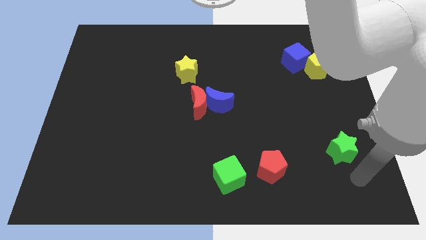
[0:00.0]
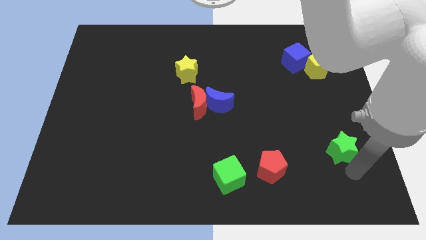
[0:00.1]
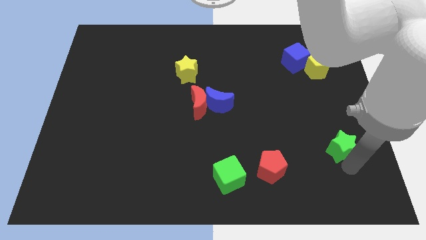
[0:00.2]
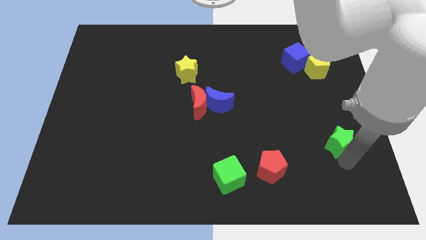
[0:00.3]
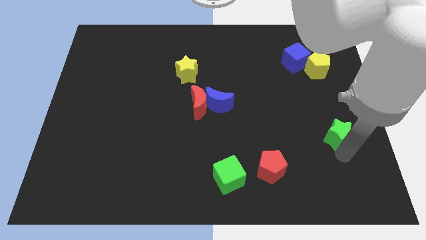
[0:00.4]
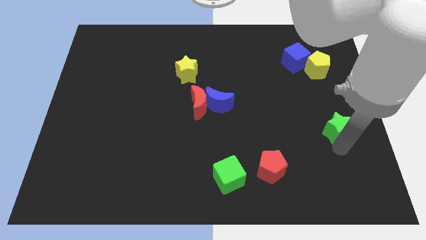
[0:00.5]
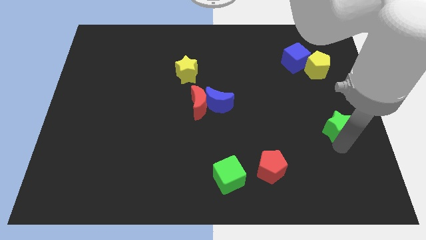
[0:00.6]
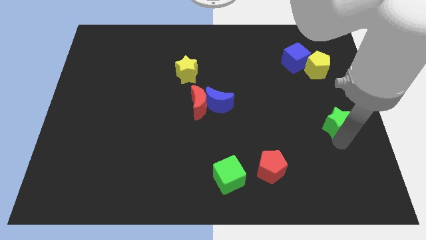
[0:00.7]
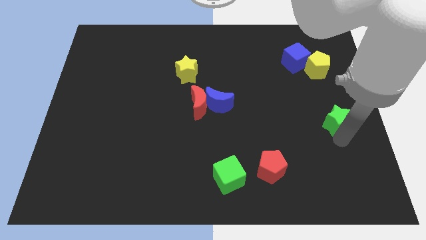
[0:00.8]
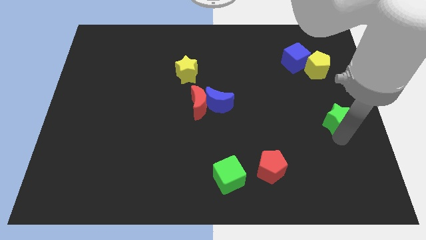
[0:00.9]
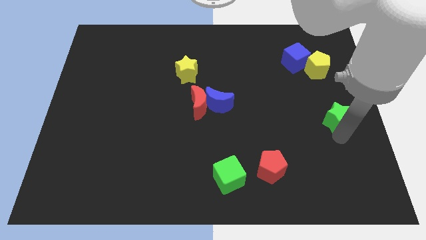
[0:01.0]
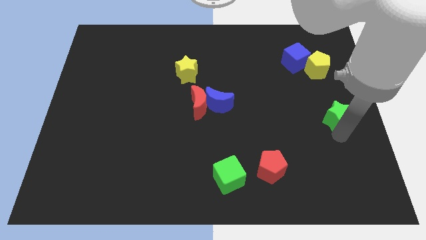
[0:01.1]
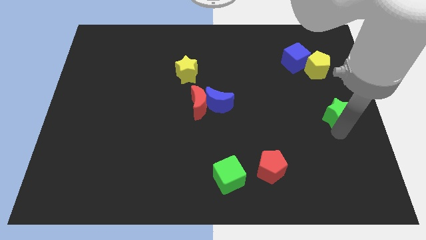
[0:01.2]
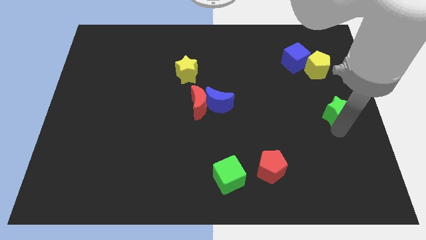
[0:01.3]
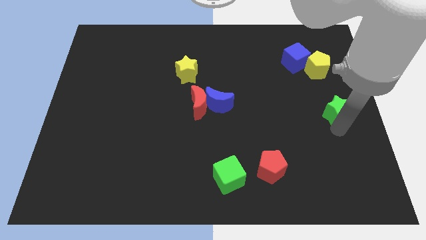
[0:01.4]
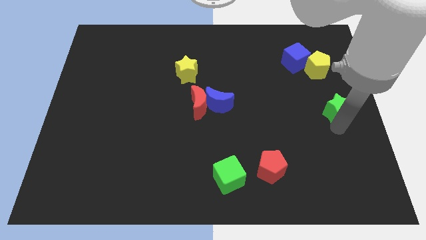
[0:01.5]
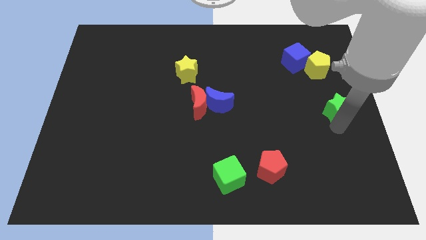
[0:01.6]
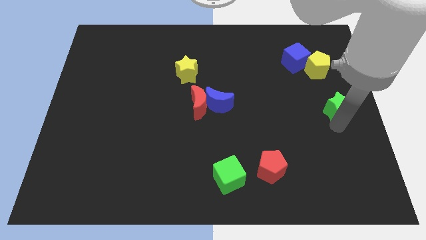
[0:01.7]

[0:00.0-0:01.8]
slide the green star towards the yellow pentagon

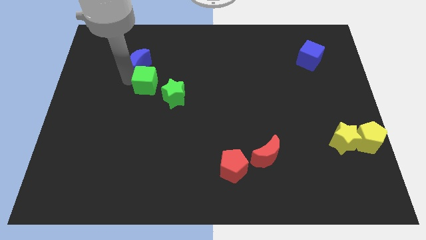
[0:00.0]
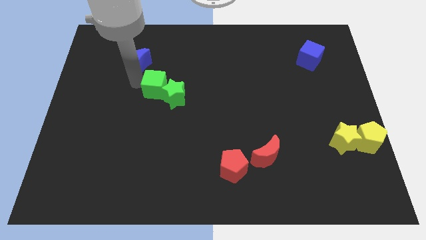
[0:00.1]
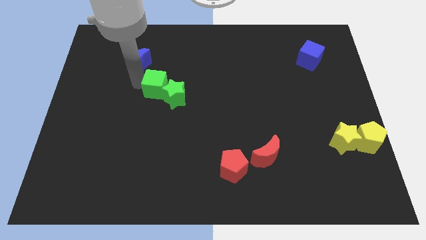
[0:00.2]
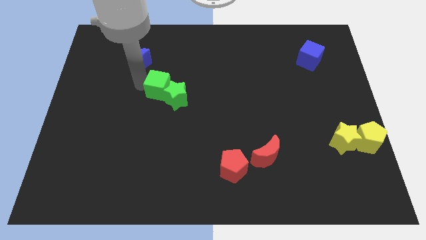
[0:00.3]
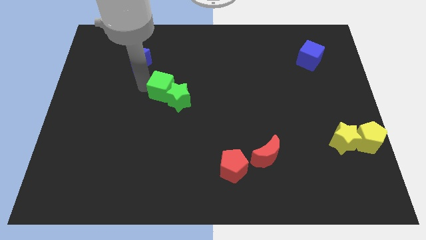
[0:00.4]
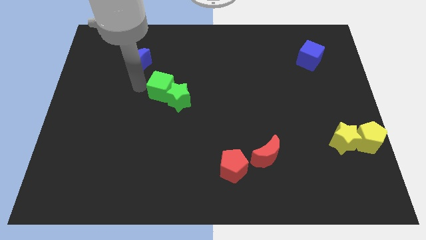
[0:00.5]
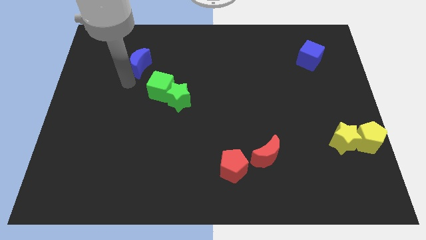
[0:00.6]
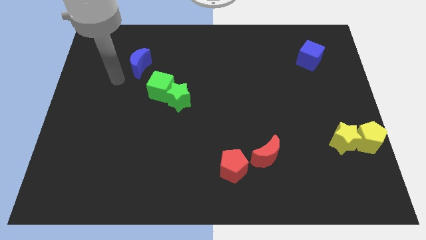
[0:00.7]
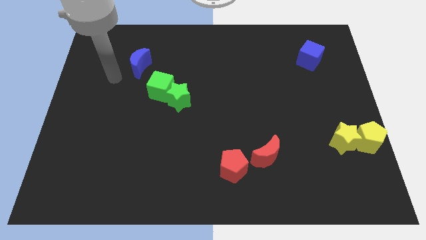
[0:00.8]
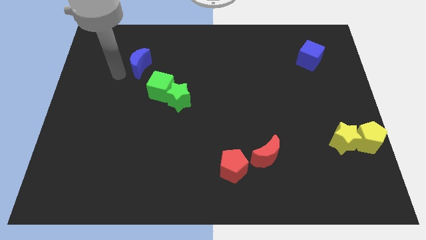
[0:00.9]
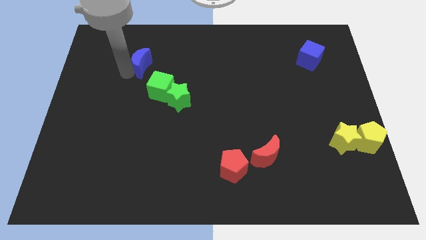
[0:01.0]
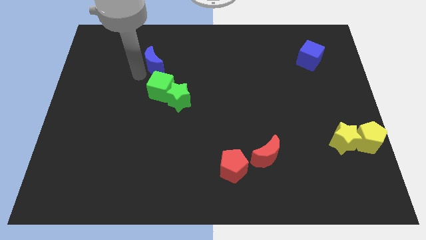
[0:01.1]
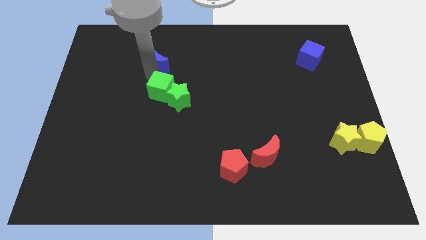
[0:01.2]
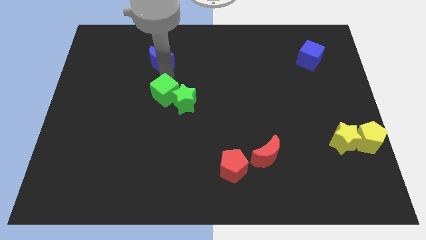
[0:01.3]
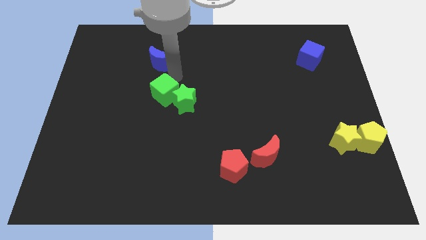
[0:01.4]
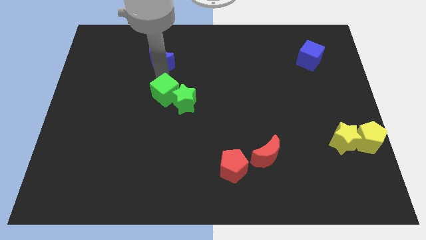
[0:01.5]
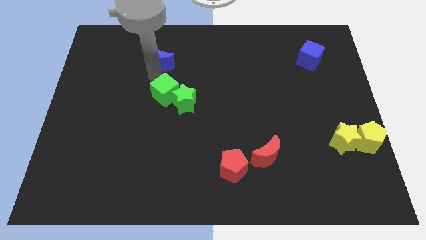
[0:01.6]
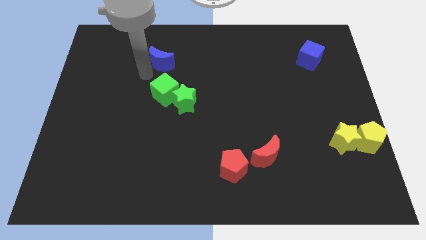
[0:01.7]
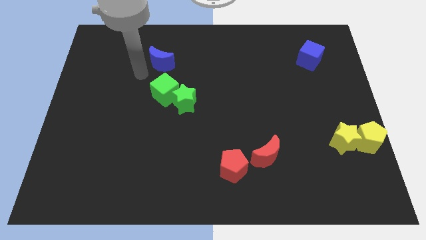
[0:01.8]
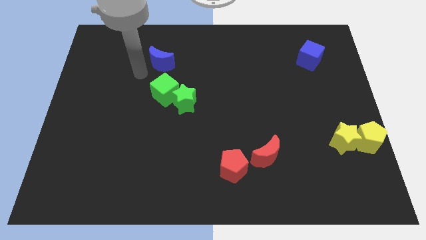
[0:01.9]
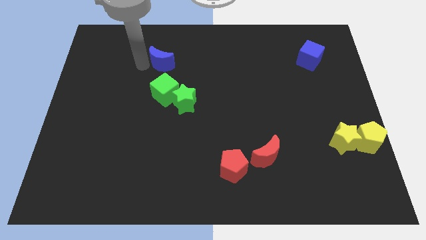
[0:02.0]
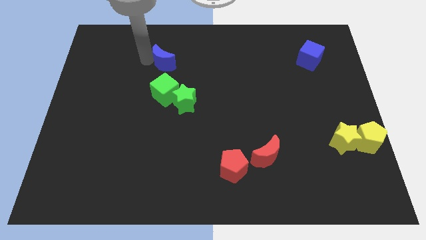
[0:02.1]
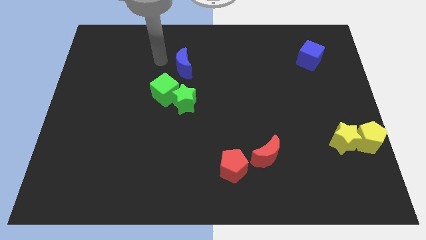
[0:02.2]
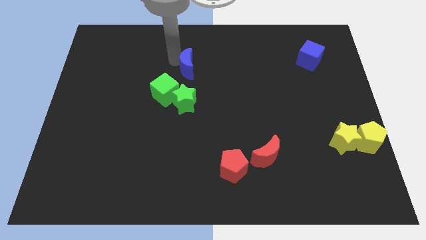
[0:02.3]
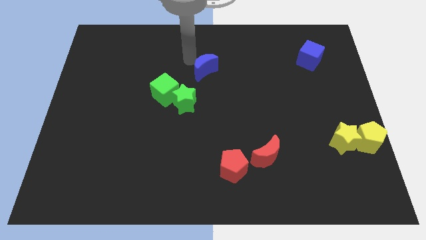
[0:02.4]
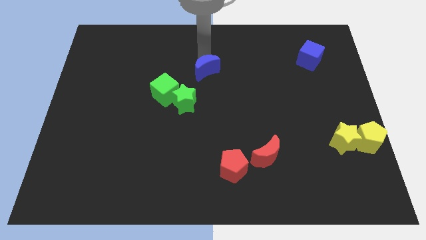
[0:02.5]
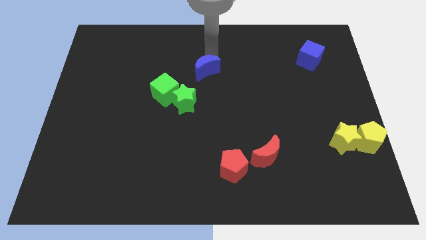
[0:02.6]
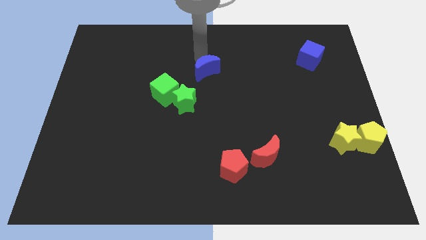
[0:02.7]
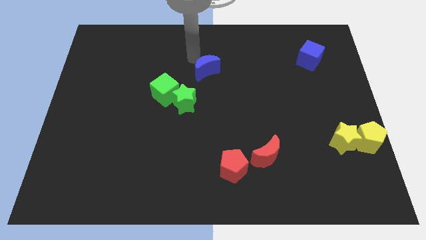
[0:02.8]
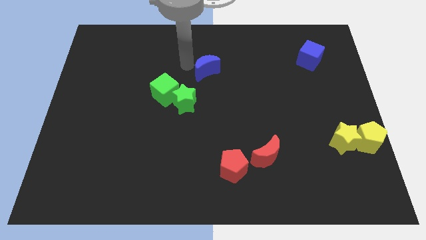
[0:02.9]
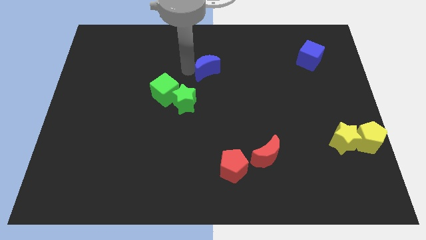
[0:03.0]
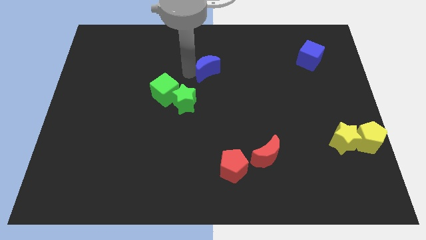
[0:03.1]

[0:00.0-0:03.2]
move blue crescent towards the blue cube

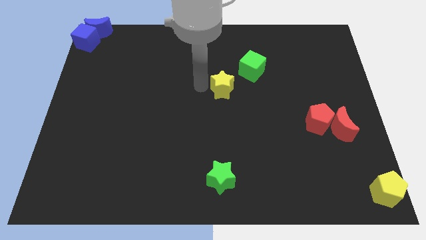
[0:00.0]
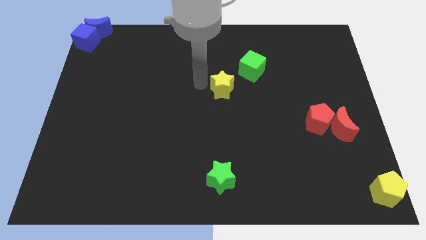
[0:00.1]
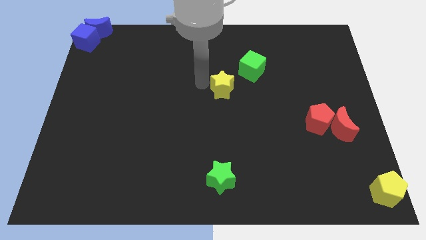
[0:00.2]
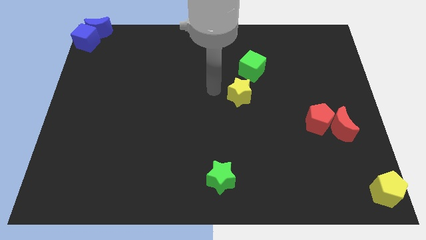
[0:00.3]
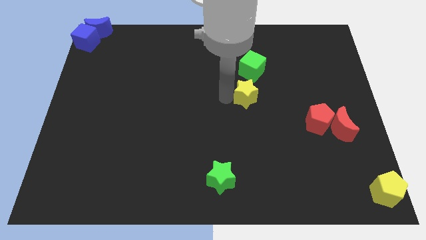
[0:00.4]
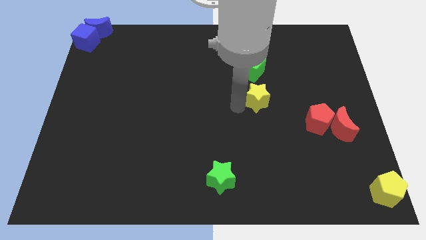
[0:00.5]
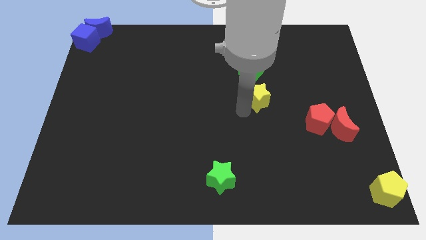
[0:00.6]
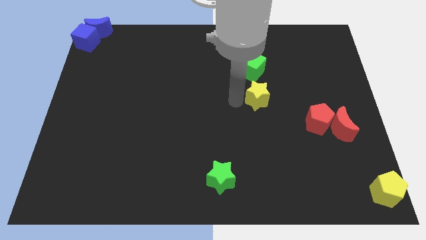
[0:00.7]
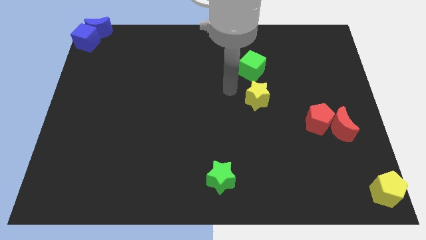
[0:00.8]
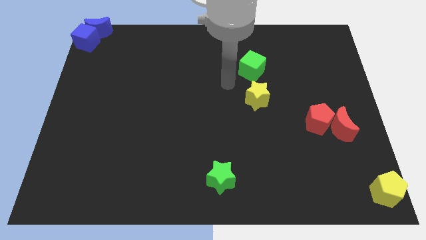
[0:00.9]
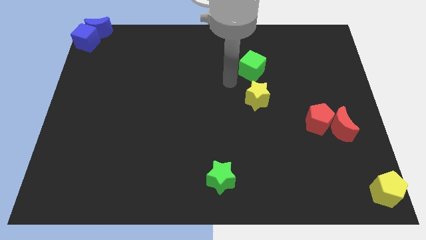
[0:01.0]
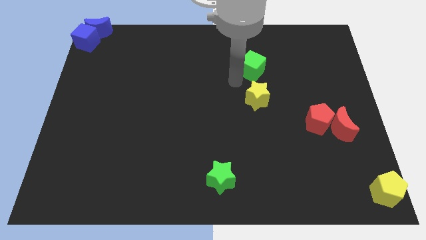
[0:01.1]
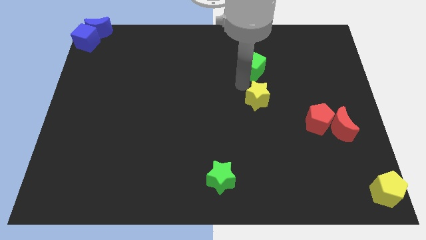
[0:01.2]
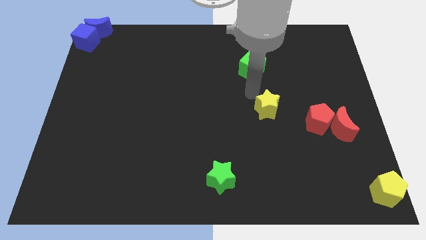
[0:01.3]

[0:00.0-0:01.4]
push the yellow star to the bottom of the green cube

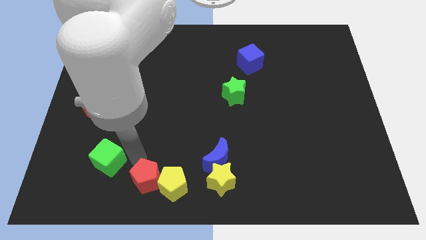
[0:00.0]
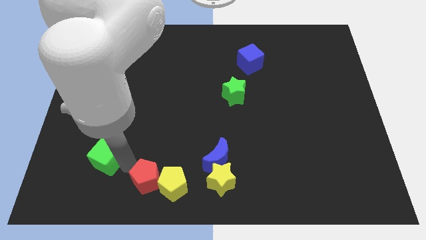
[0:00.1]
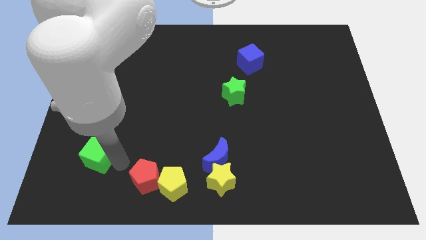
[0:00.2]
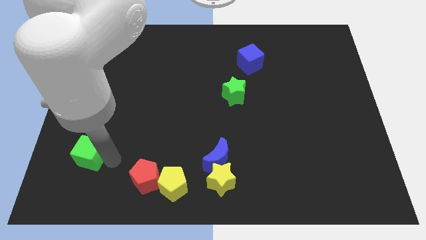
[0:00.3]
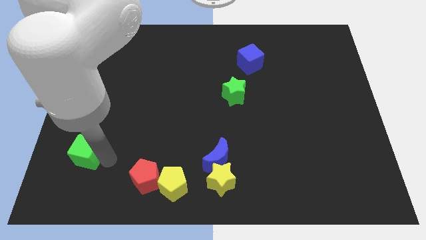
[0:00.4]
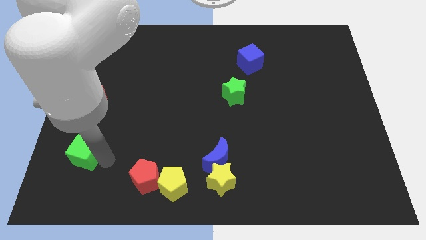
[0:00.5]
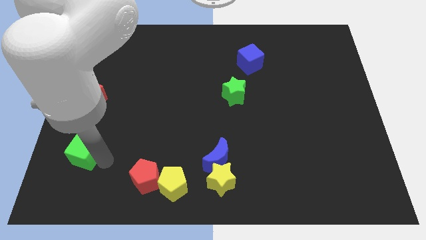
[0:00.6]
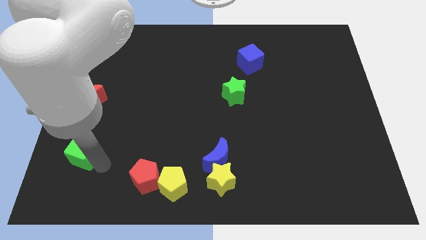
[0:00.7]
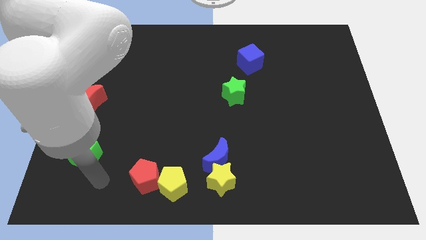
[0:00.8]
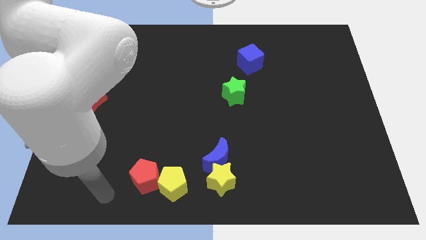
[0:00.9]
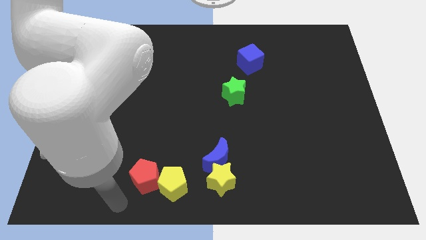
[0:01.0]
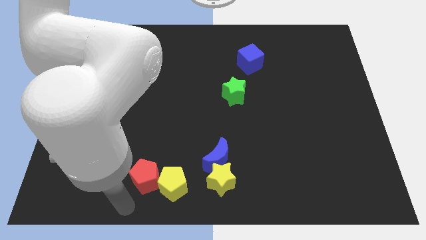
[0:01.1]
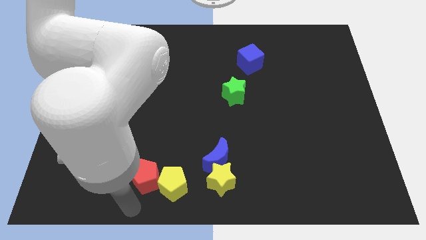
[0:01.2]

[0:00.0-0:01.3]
move the green cube slightly to the left side

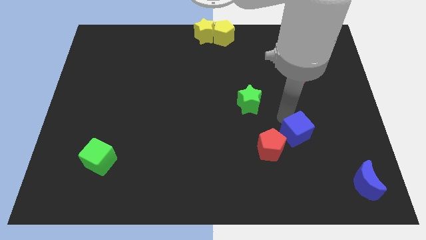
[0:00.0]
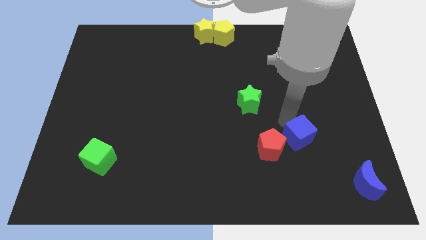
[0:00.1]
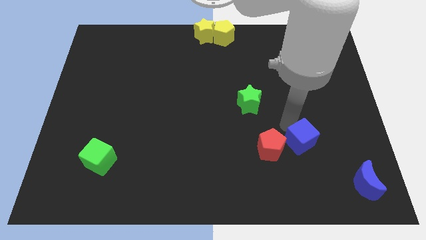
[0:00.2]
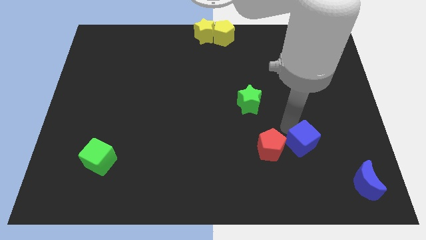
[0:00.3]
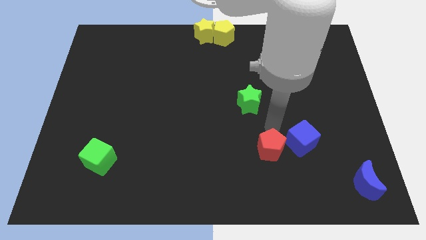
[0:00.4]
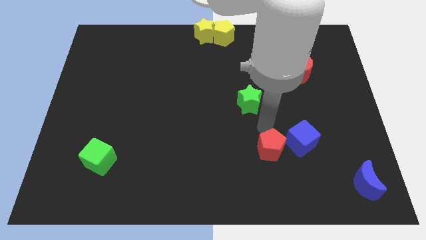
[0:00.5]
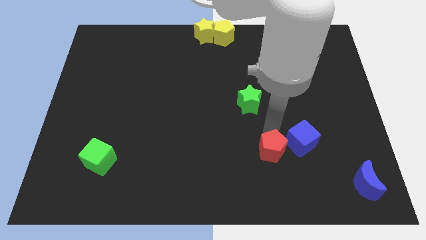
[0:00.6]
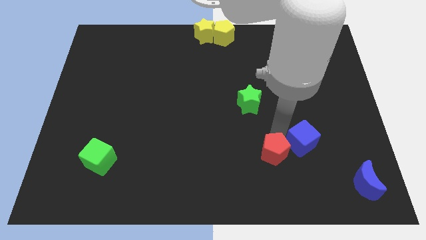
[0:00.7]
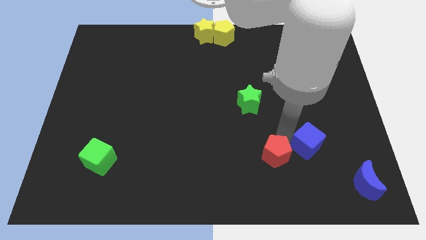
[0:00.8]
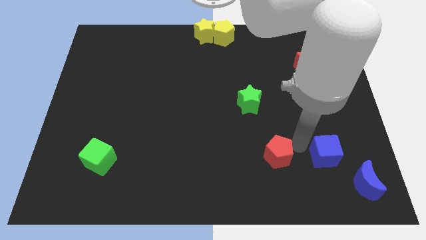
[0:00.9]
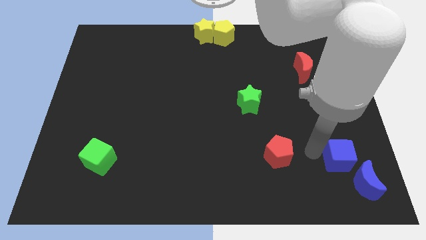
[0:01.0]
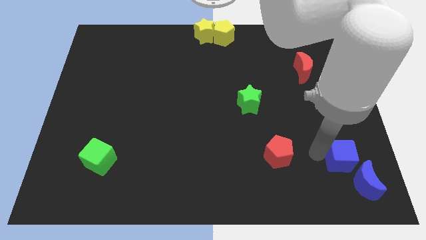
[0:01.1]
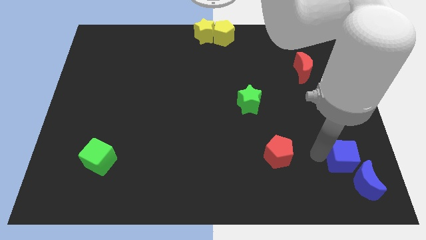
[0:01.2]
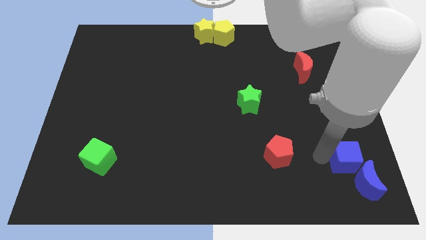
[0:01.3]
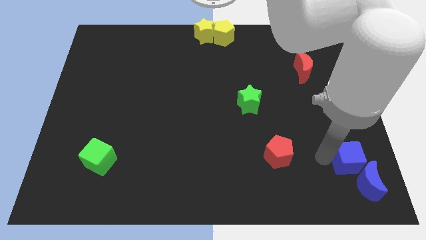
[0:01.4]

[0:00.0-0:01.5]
move the blue cube away from the red pentagon
